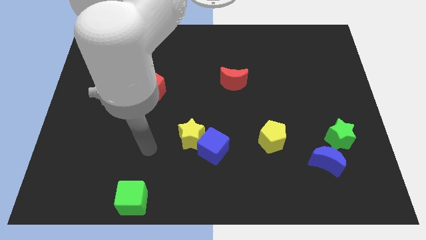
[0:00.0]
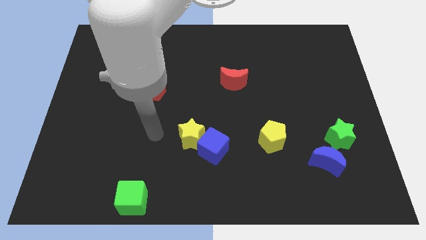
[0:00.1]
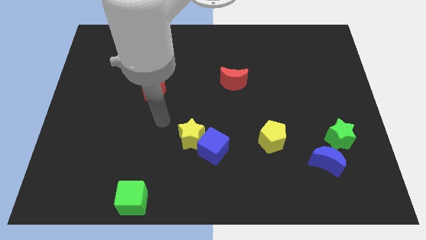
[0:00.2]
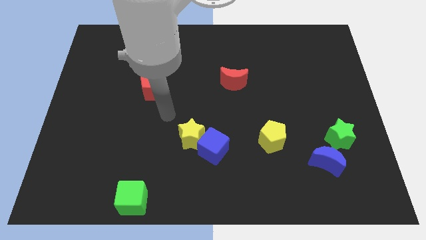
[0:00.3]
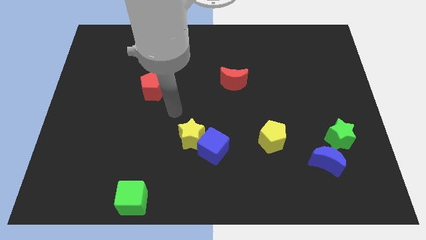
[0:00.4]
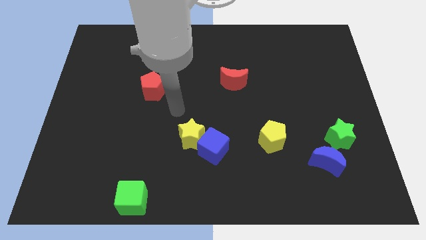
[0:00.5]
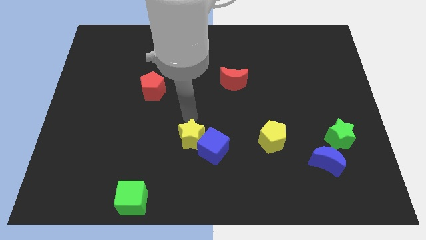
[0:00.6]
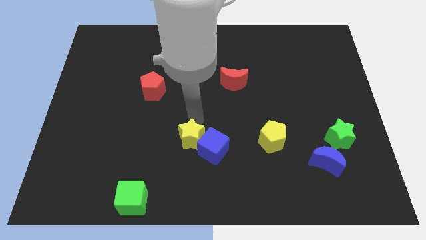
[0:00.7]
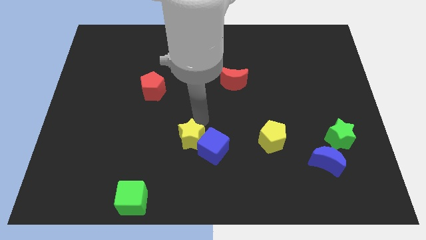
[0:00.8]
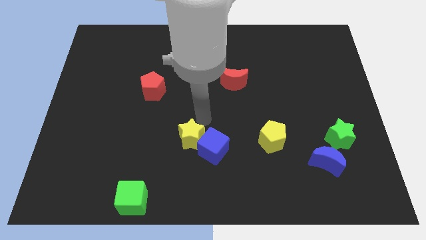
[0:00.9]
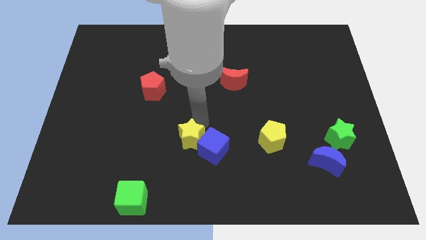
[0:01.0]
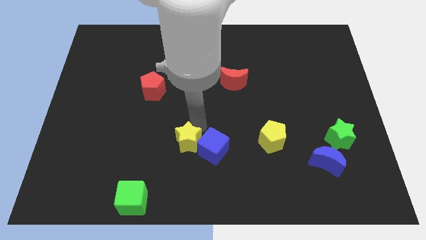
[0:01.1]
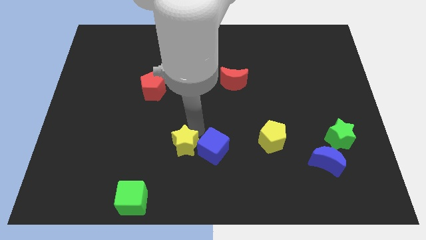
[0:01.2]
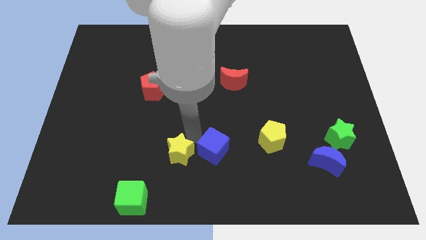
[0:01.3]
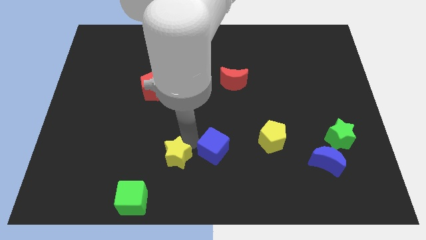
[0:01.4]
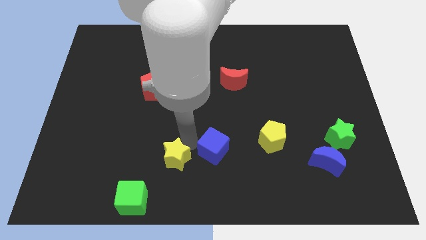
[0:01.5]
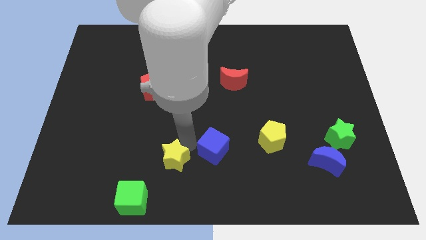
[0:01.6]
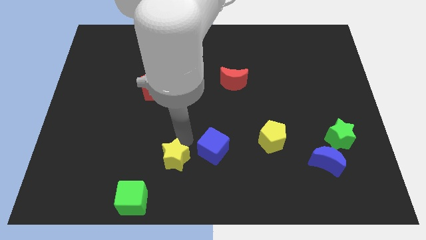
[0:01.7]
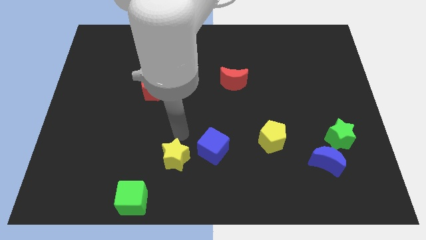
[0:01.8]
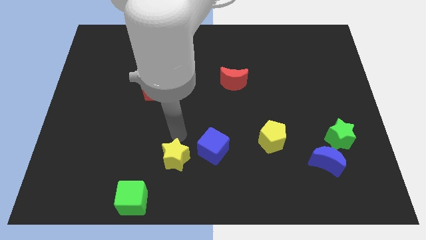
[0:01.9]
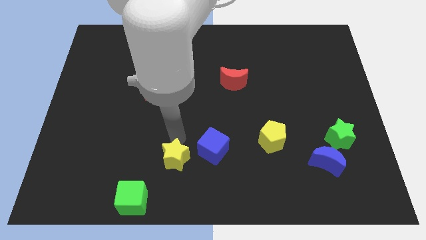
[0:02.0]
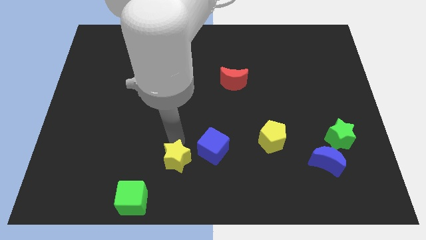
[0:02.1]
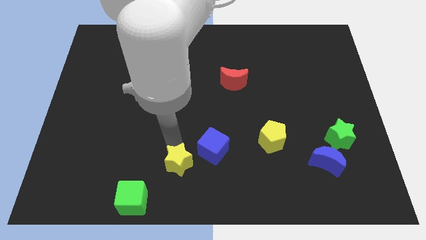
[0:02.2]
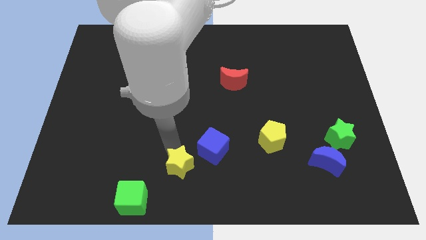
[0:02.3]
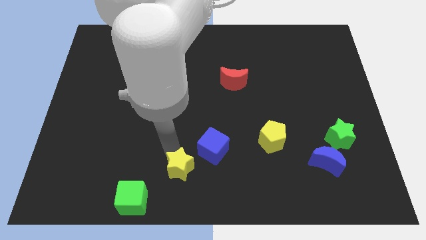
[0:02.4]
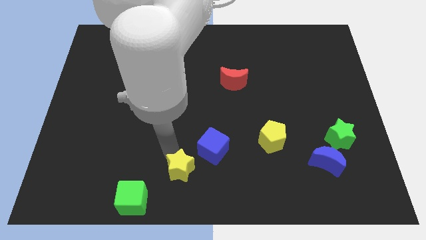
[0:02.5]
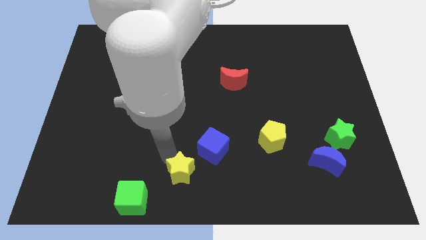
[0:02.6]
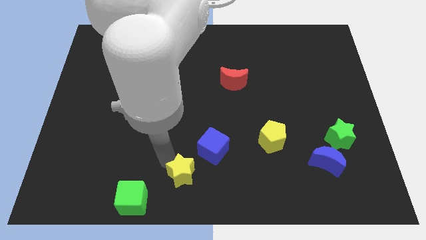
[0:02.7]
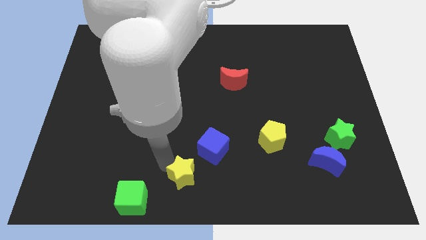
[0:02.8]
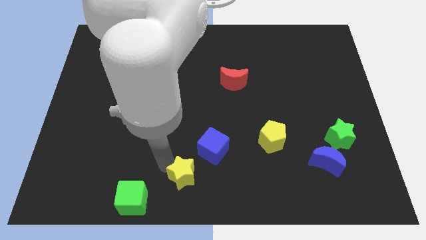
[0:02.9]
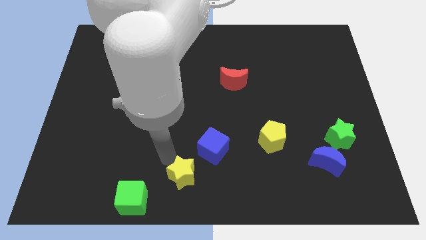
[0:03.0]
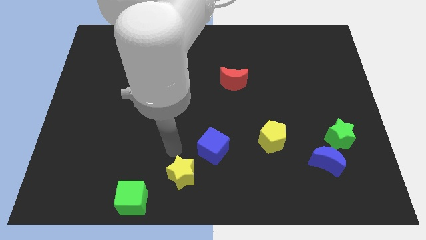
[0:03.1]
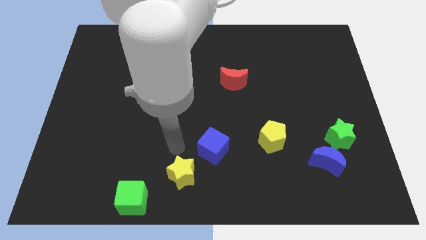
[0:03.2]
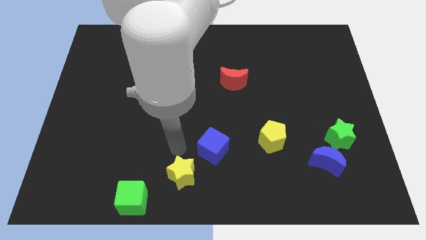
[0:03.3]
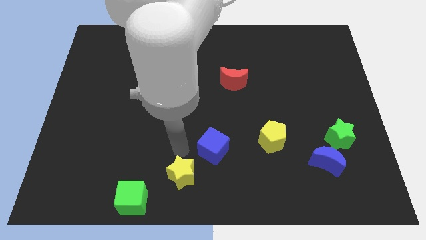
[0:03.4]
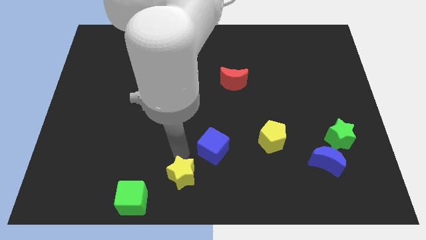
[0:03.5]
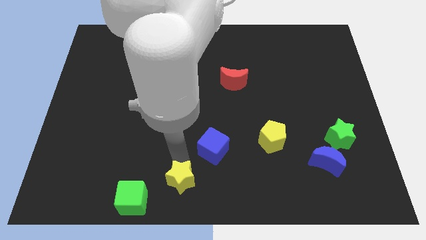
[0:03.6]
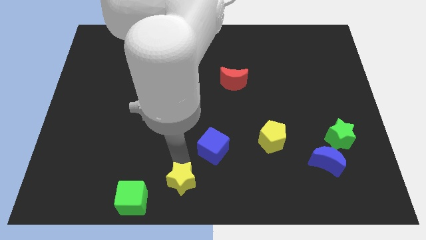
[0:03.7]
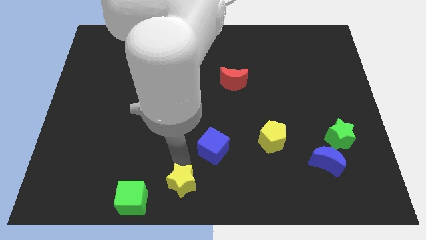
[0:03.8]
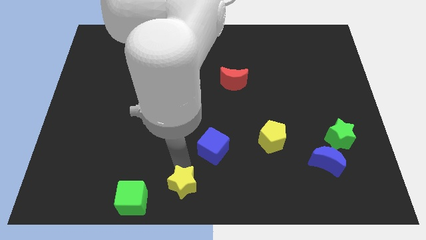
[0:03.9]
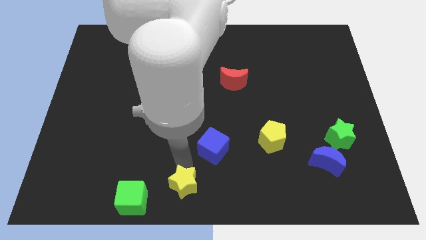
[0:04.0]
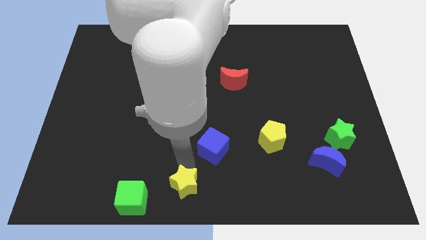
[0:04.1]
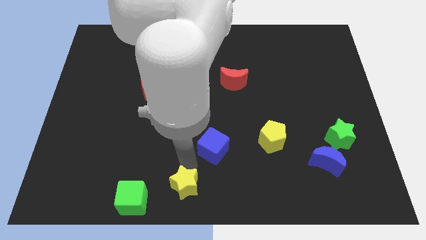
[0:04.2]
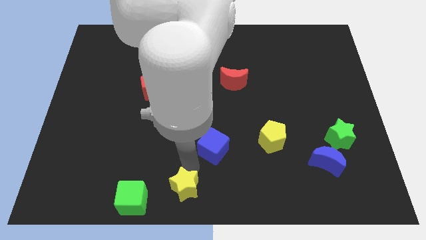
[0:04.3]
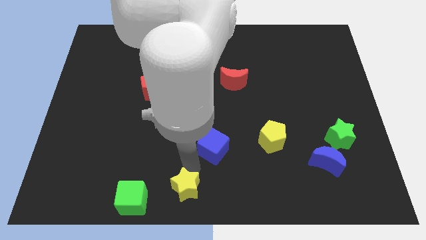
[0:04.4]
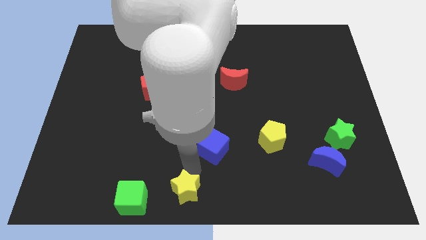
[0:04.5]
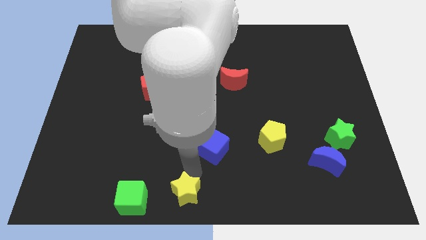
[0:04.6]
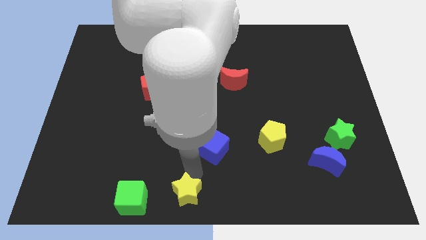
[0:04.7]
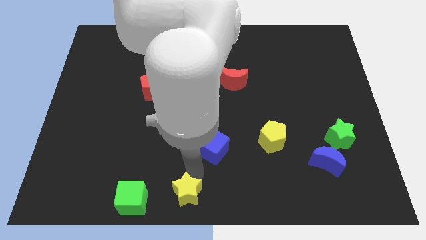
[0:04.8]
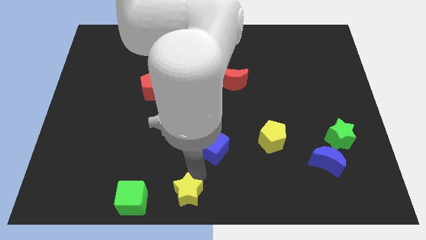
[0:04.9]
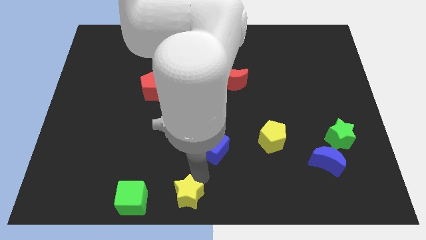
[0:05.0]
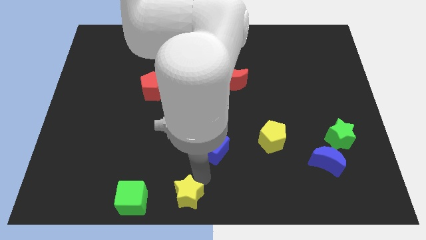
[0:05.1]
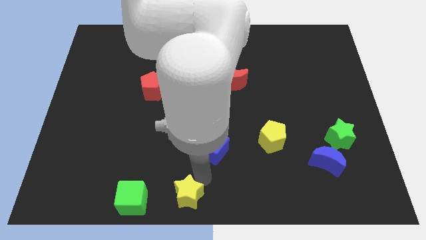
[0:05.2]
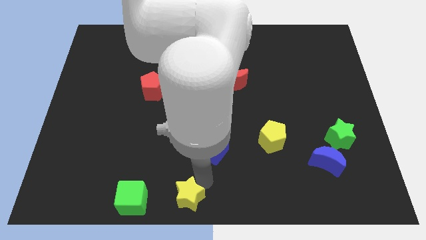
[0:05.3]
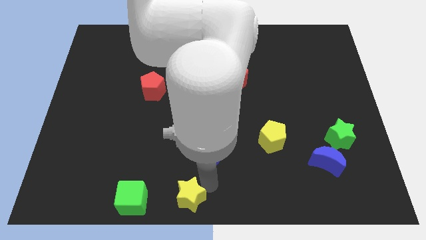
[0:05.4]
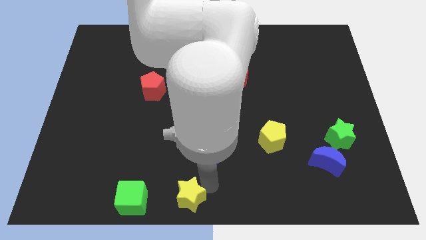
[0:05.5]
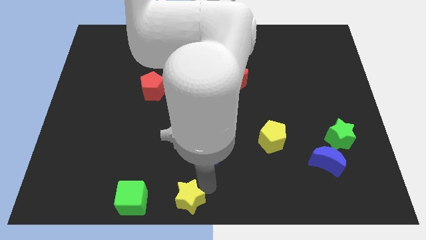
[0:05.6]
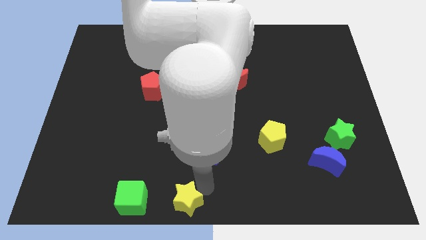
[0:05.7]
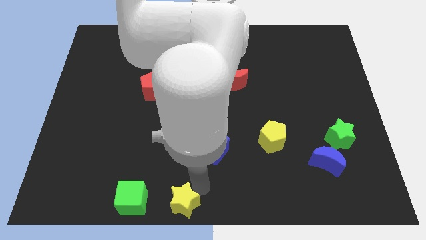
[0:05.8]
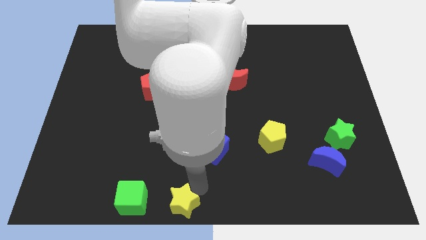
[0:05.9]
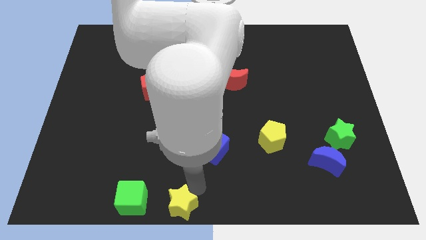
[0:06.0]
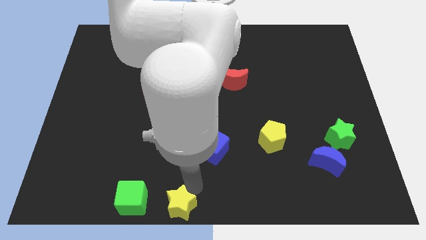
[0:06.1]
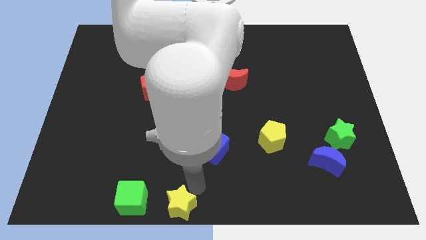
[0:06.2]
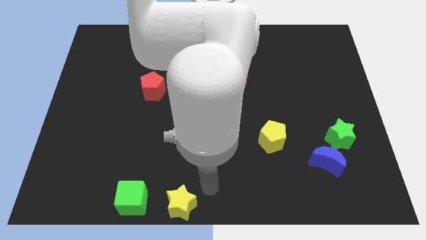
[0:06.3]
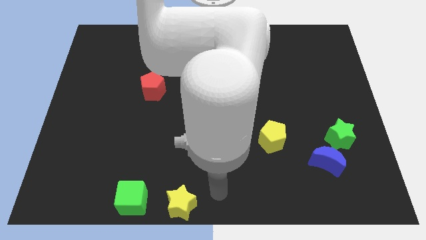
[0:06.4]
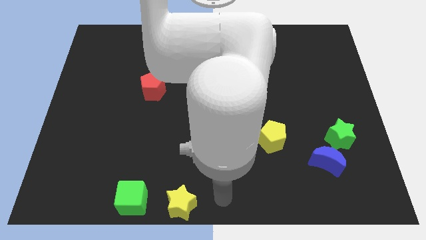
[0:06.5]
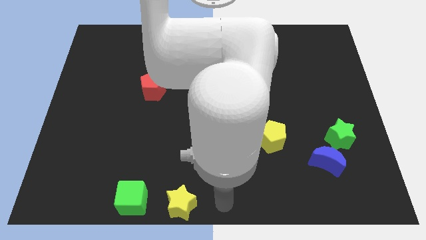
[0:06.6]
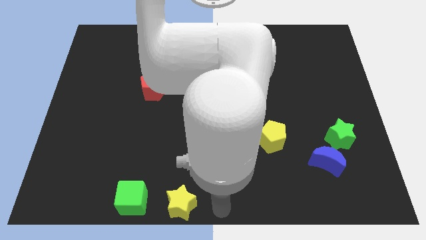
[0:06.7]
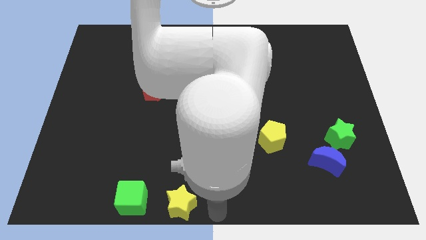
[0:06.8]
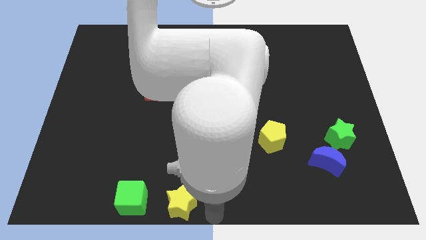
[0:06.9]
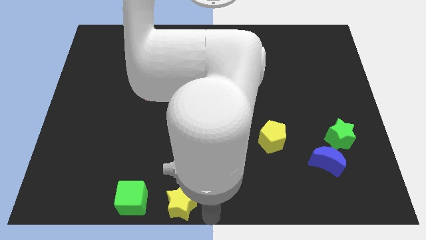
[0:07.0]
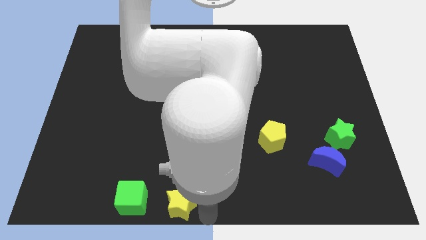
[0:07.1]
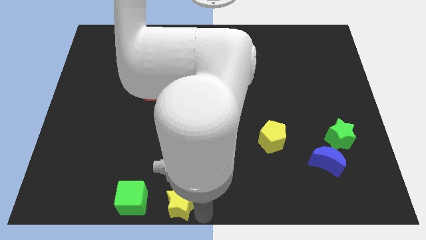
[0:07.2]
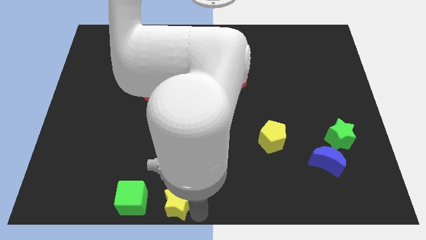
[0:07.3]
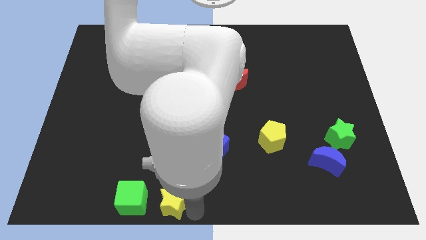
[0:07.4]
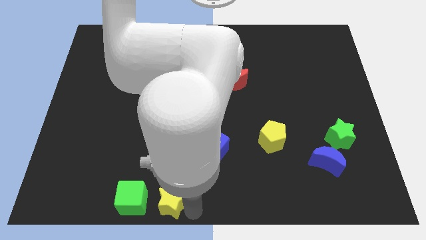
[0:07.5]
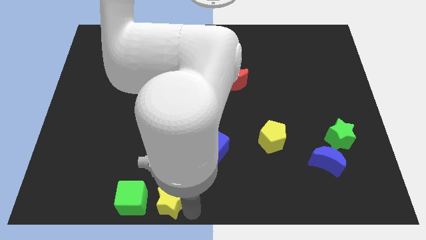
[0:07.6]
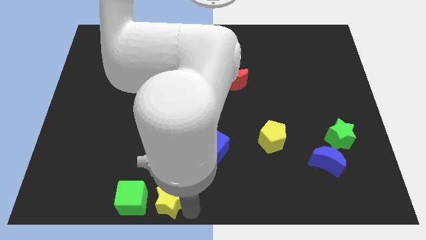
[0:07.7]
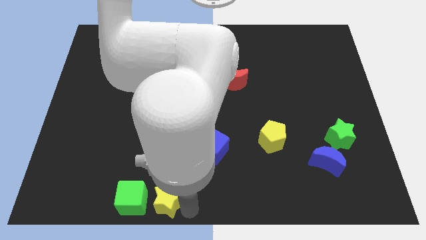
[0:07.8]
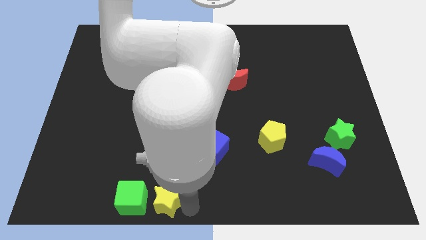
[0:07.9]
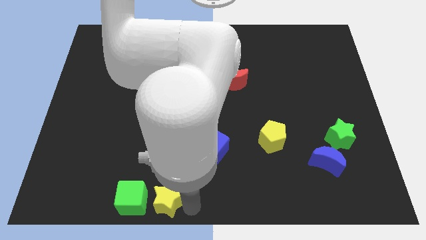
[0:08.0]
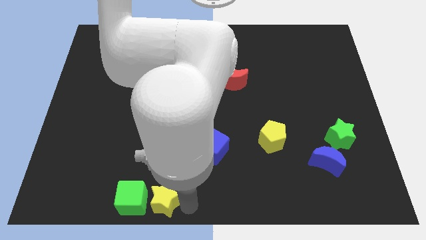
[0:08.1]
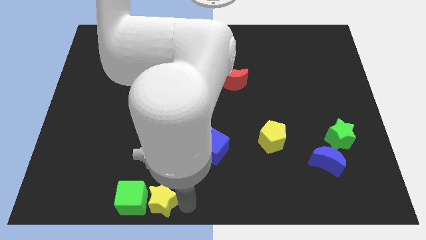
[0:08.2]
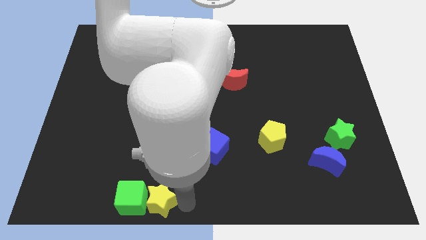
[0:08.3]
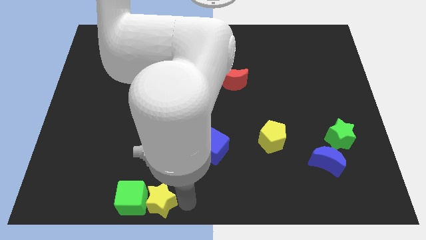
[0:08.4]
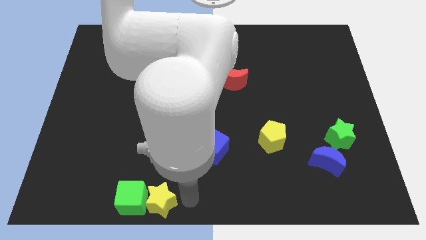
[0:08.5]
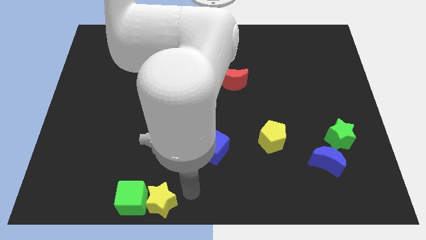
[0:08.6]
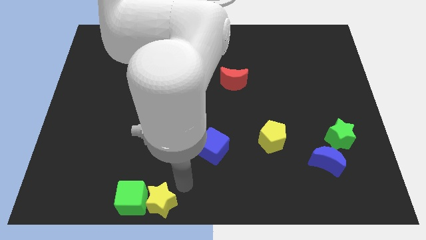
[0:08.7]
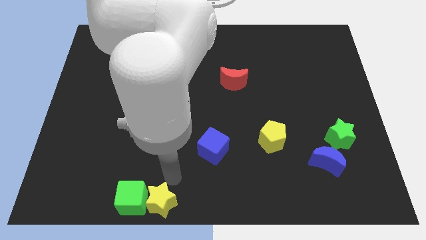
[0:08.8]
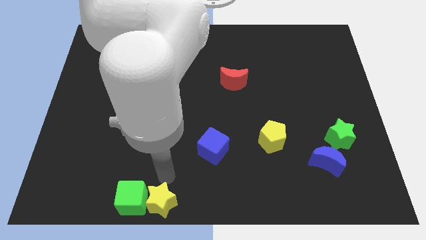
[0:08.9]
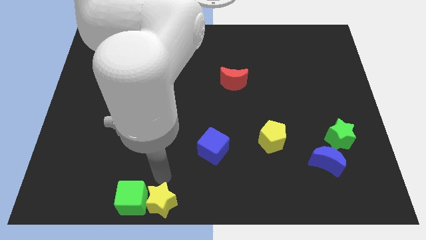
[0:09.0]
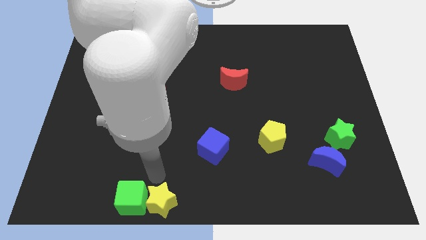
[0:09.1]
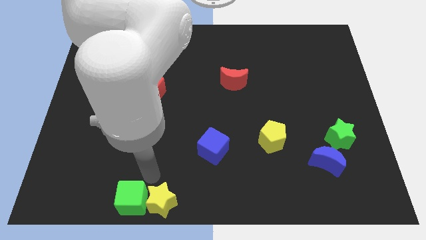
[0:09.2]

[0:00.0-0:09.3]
move the yellow star right beside the green cube
